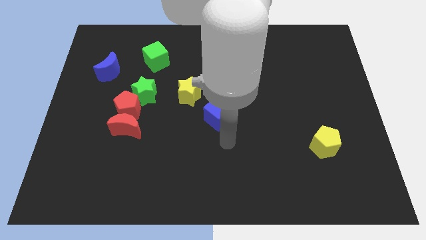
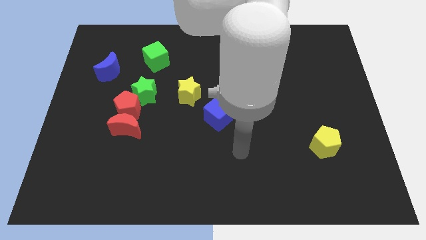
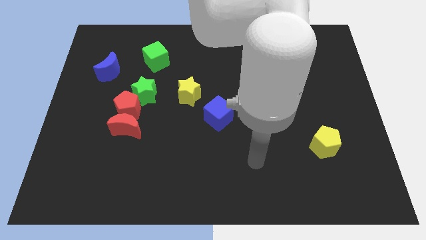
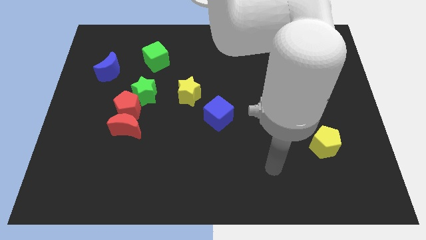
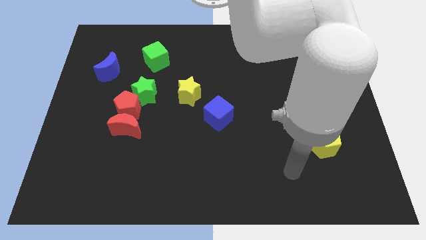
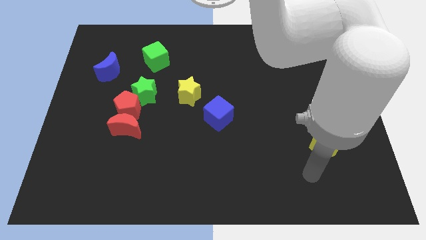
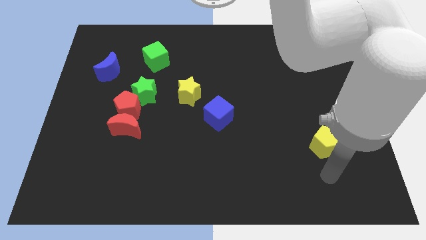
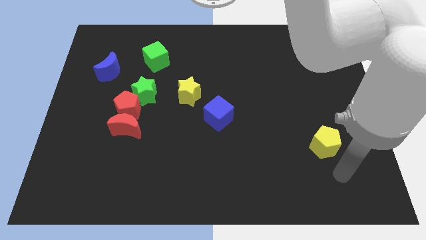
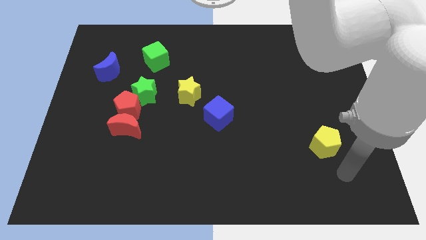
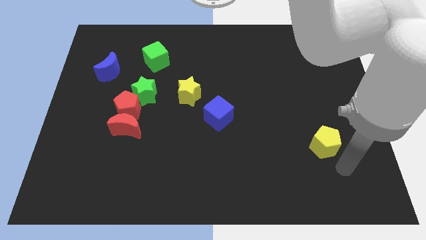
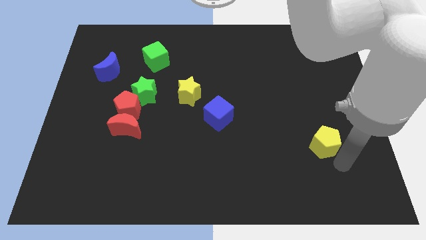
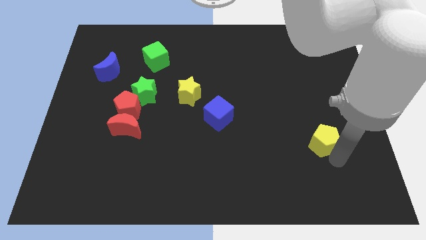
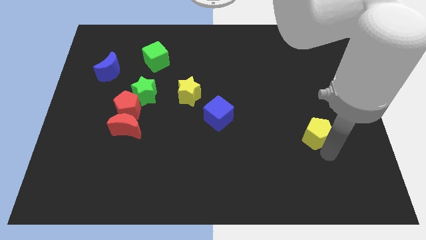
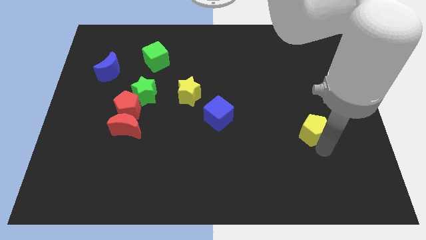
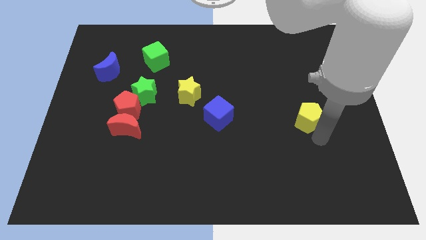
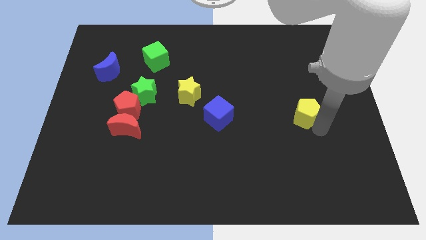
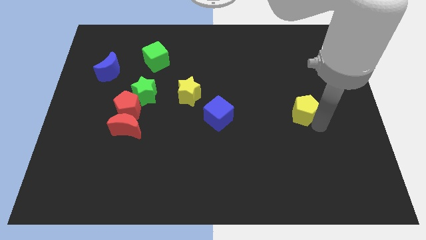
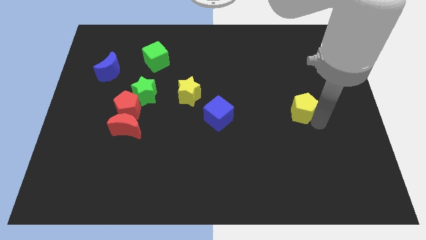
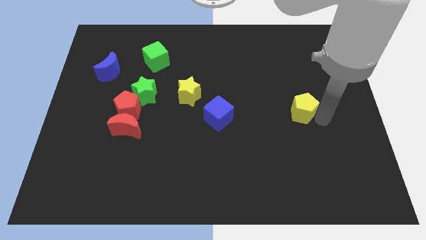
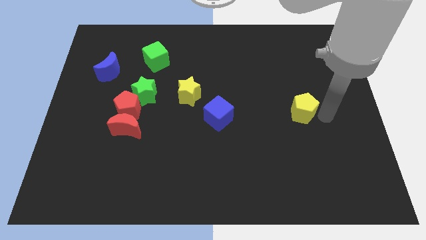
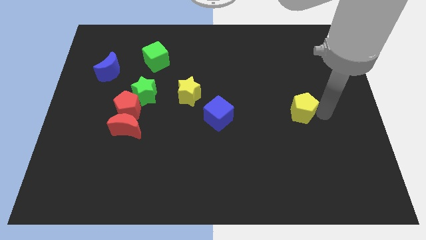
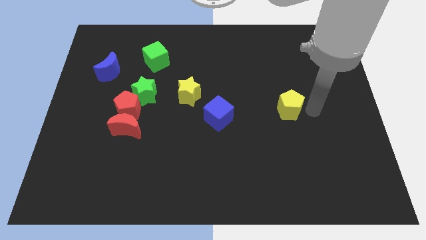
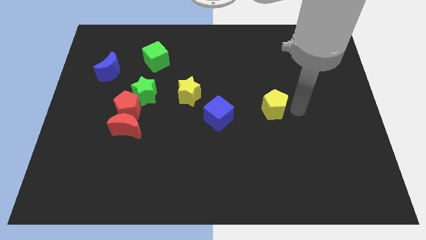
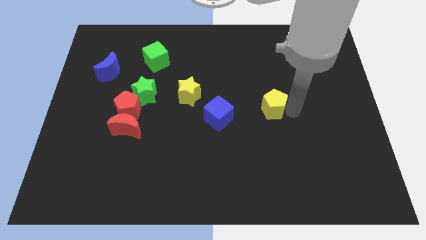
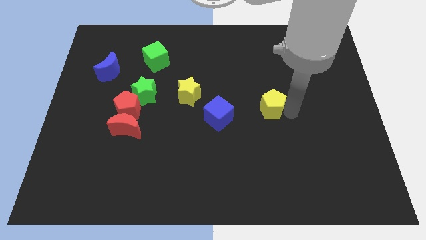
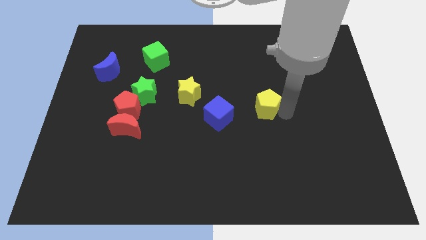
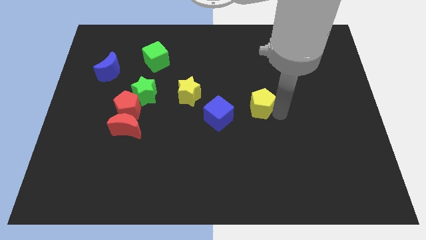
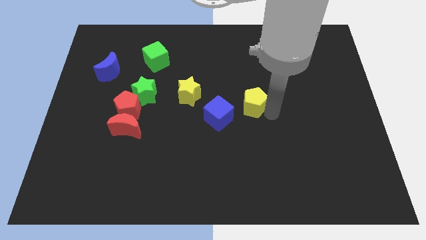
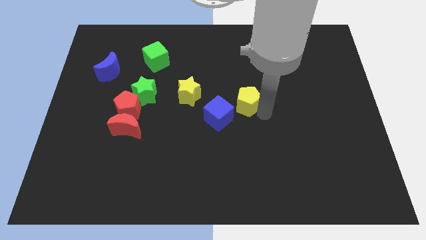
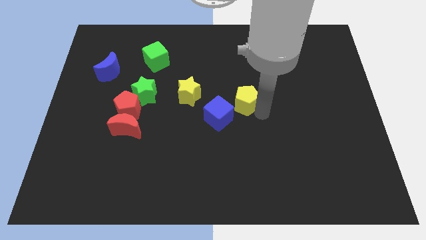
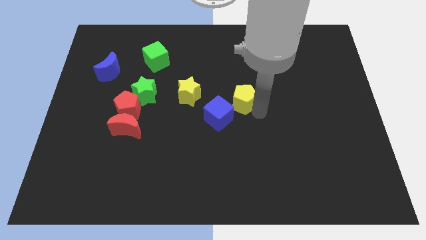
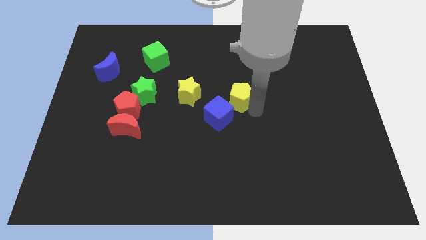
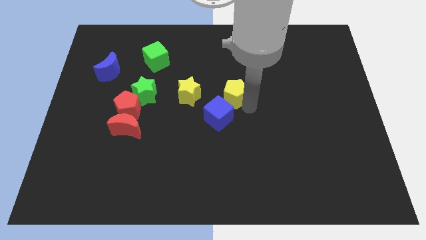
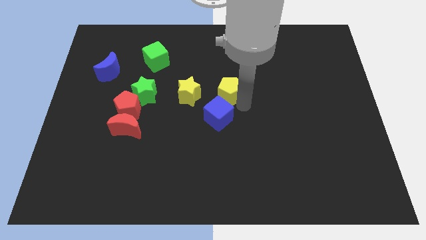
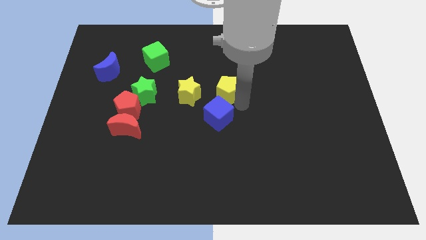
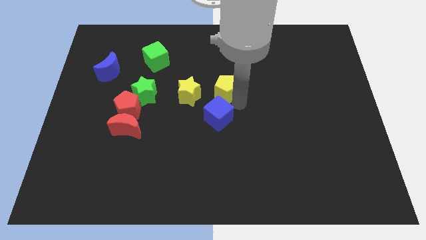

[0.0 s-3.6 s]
place the yellow pentagon at the top of blue cube

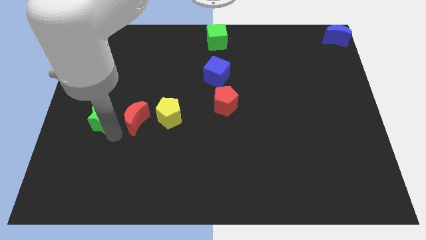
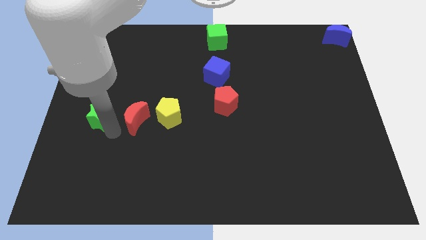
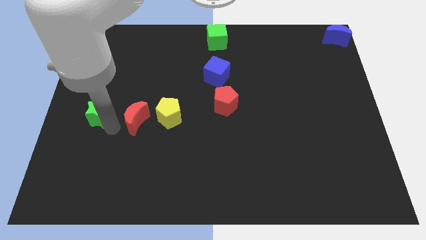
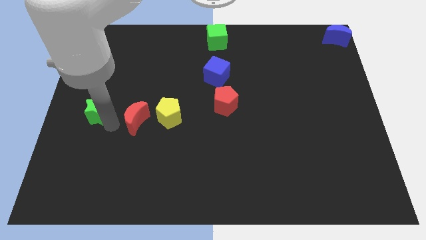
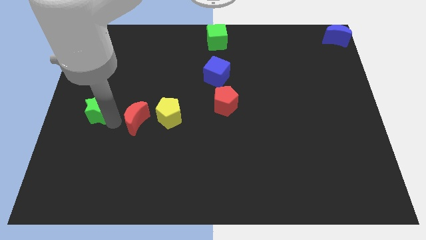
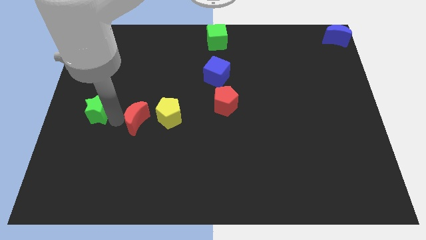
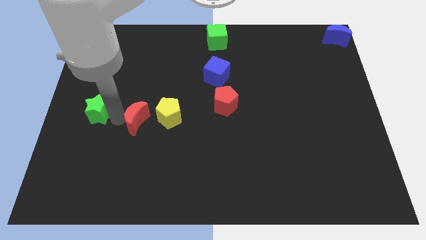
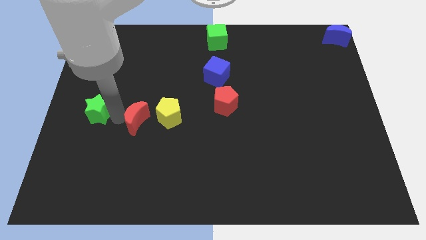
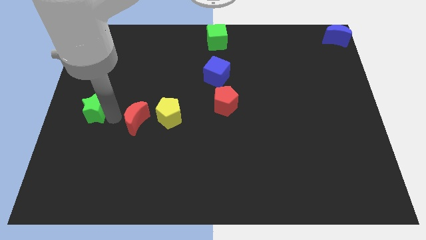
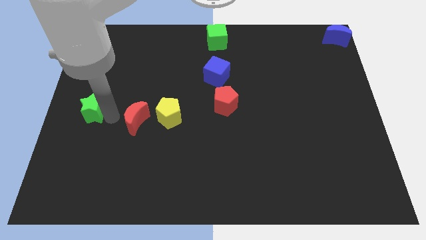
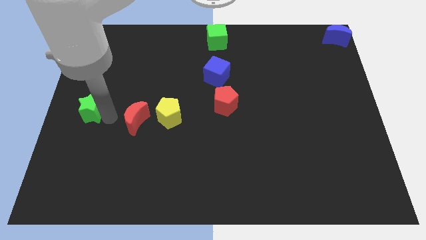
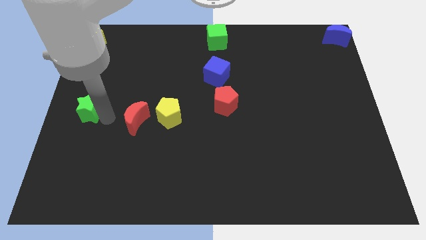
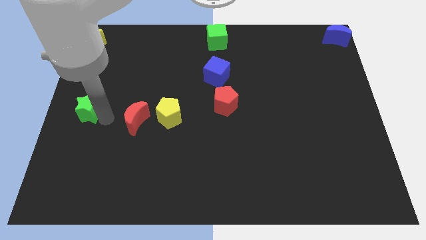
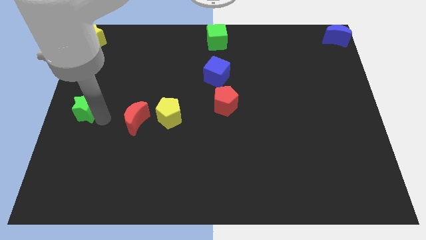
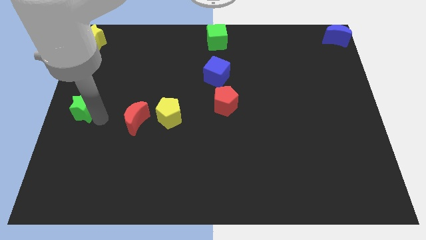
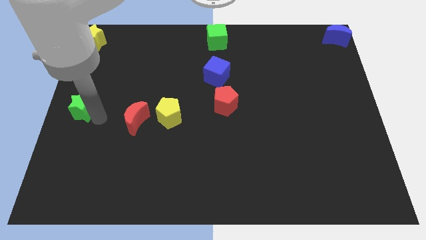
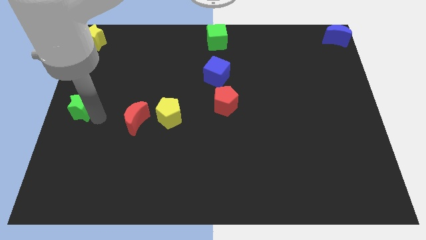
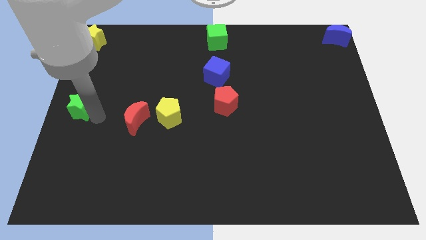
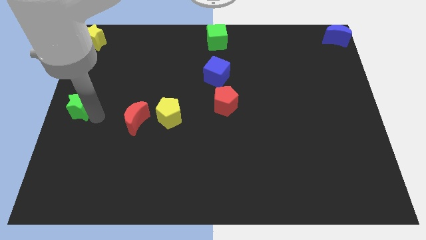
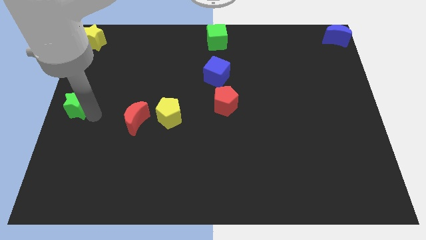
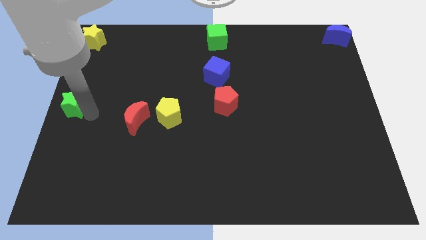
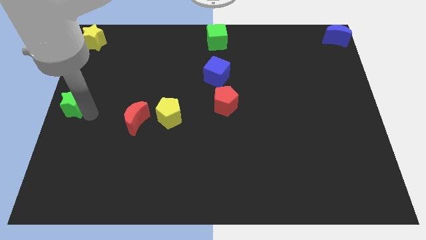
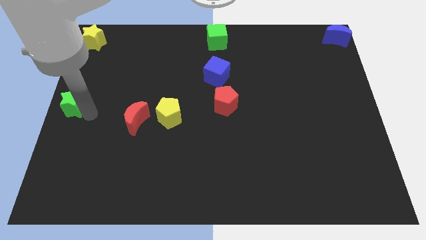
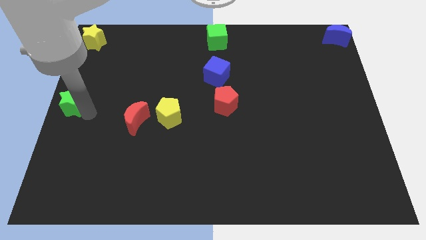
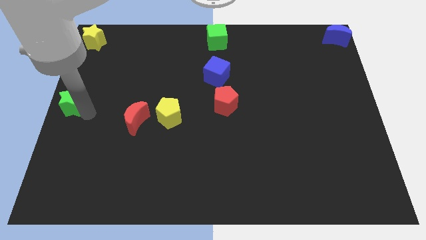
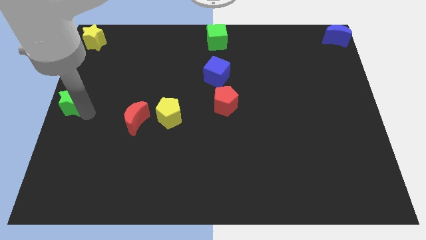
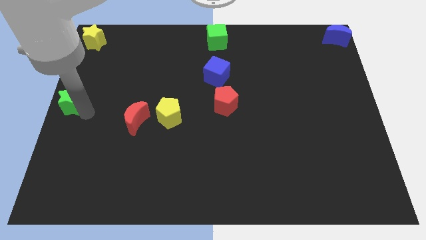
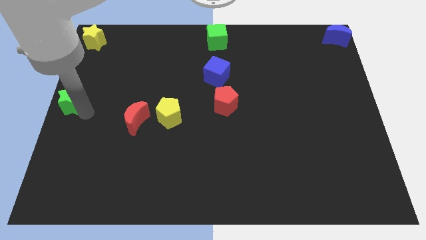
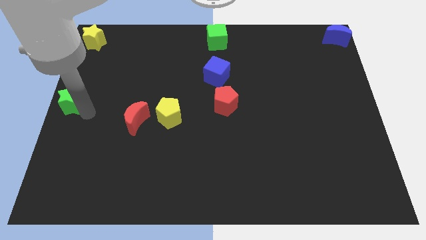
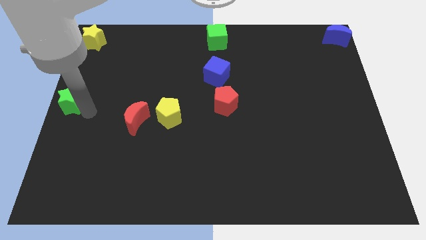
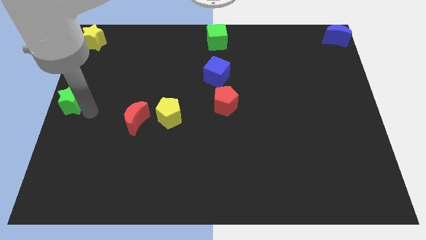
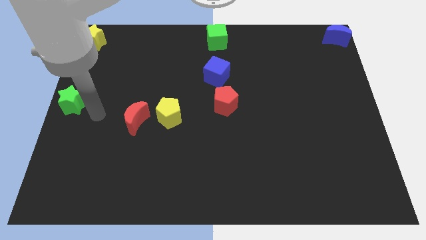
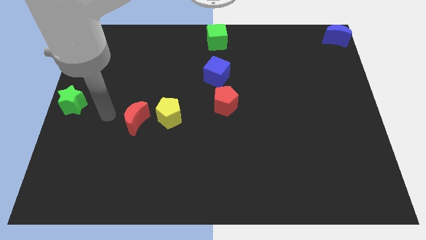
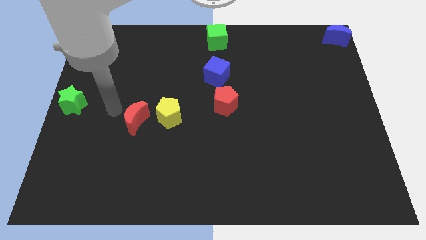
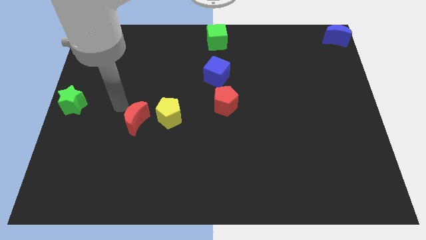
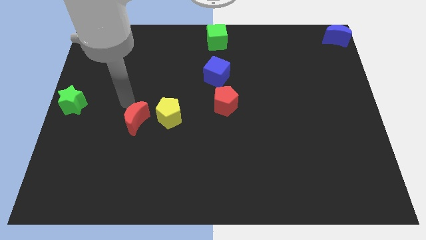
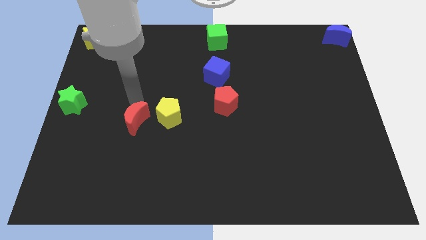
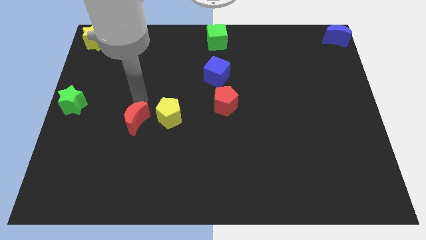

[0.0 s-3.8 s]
move the green star to the middle left of the board

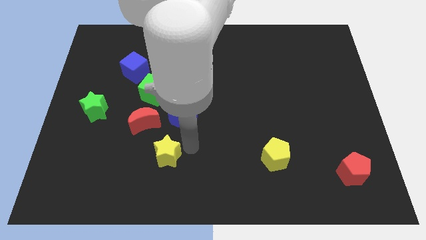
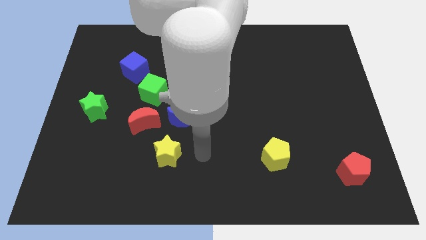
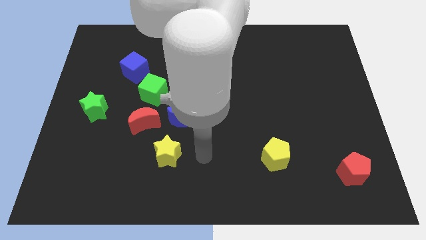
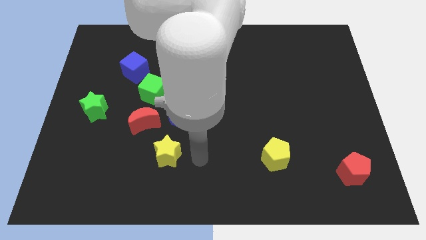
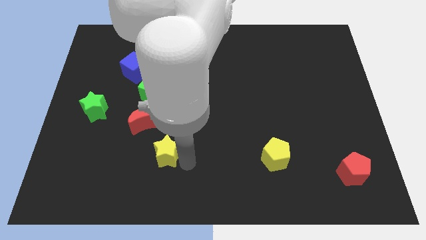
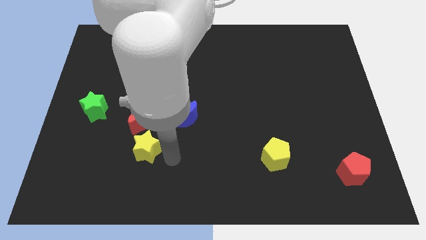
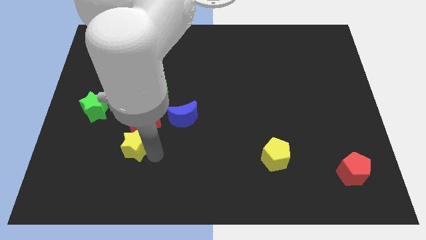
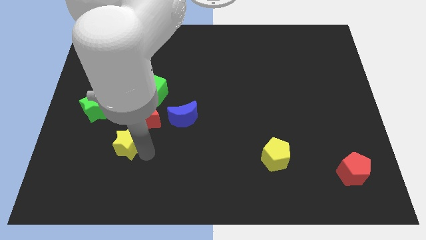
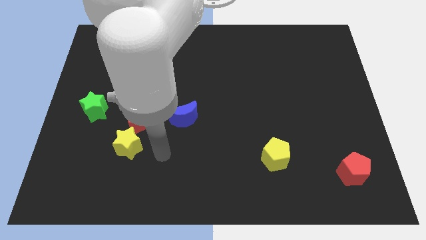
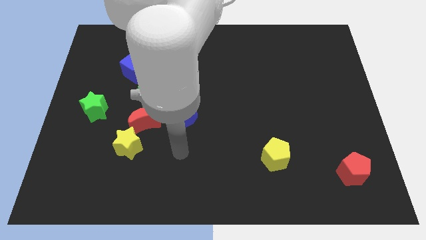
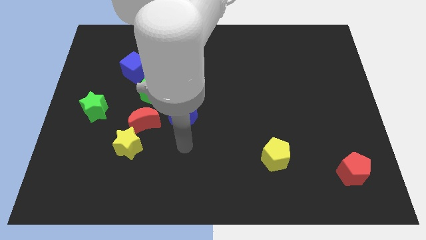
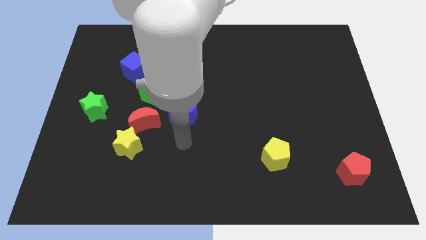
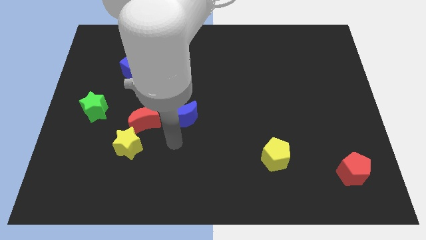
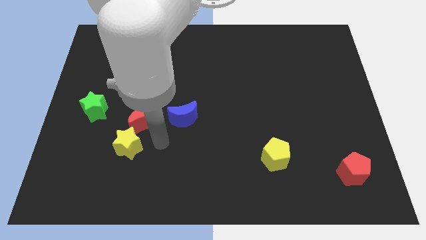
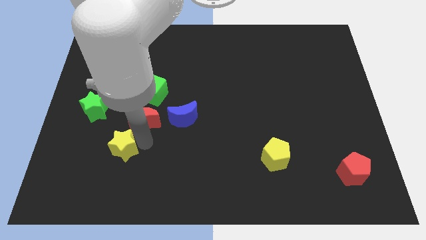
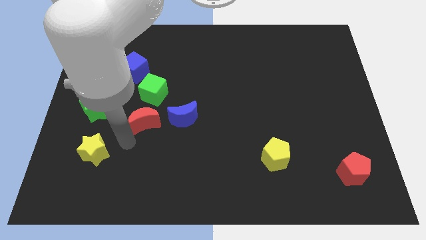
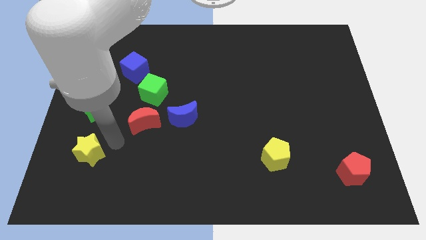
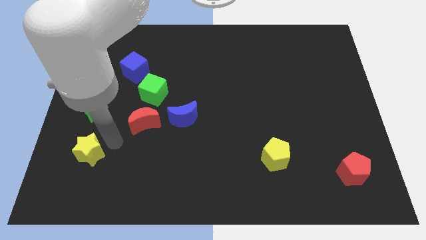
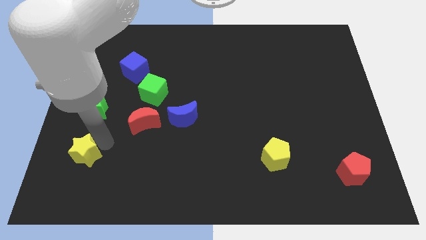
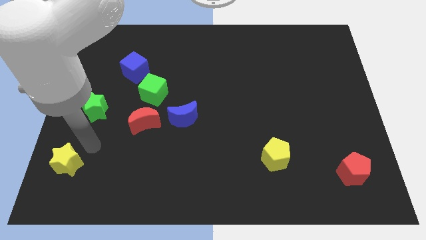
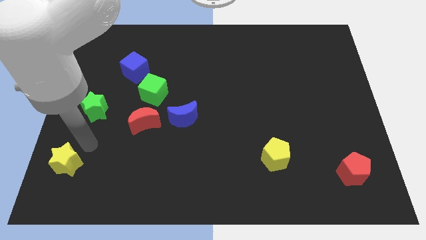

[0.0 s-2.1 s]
place the yellow star at the bottom of the green star
